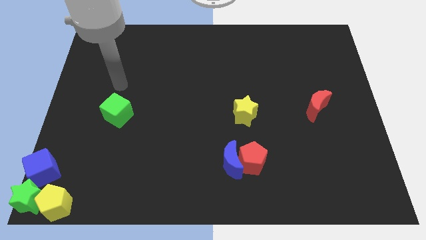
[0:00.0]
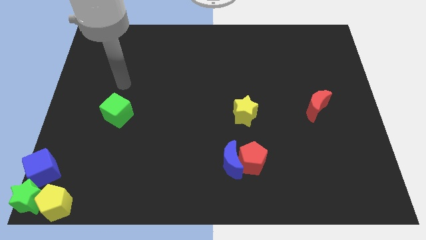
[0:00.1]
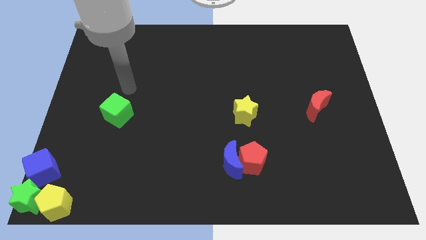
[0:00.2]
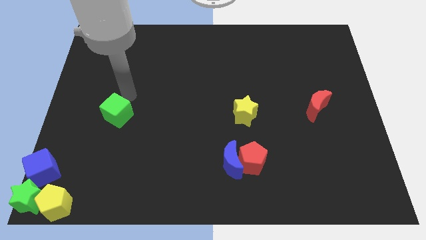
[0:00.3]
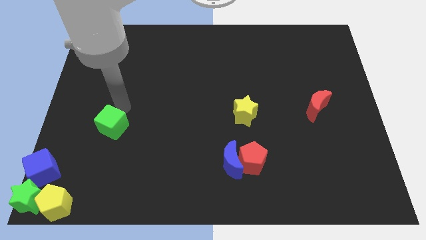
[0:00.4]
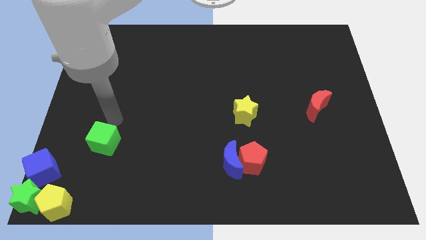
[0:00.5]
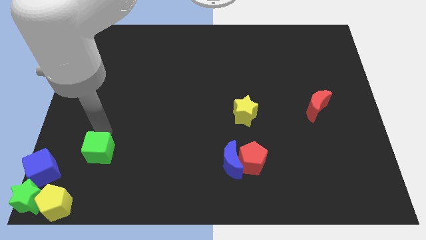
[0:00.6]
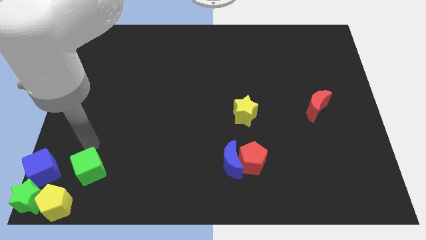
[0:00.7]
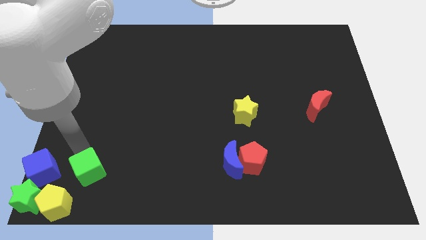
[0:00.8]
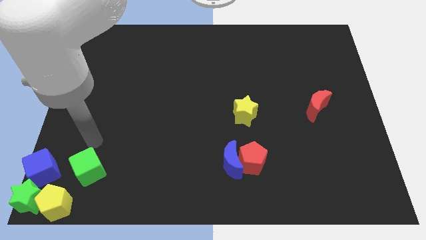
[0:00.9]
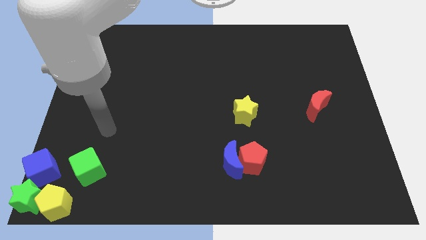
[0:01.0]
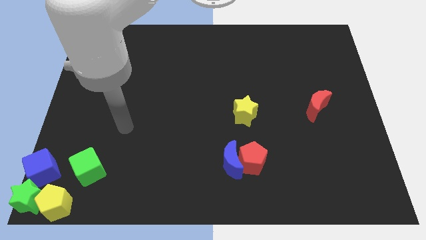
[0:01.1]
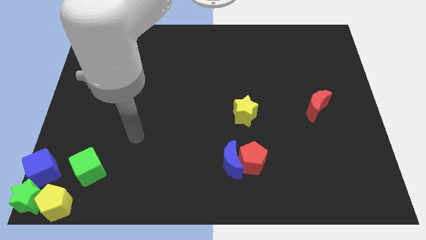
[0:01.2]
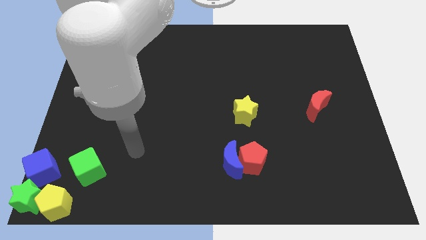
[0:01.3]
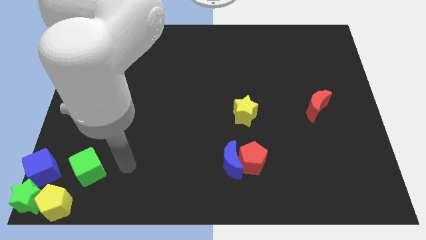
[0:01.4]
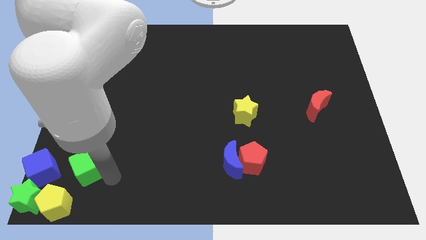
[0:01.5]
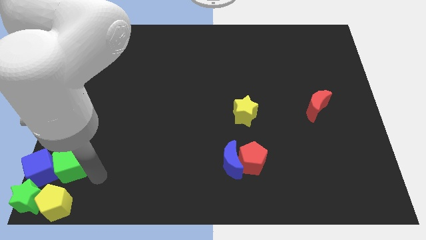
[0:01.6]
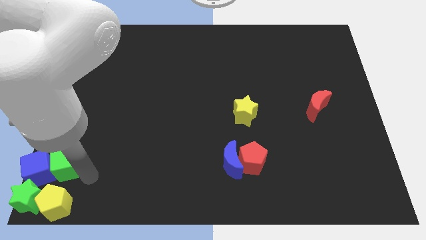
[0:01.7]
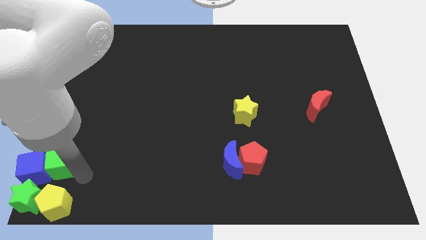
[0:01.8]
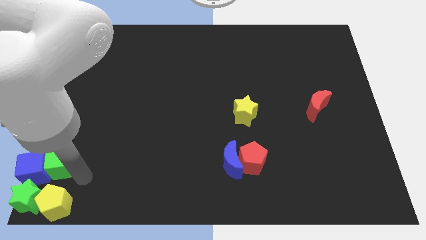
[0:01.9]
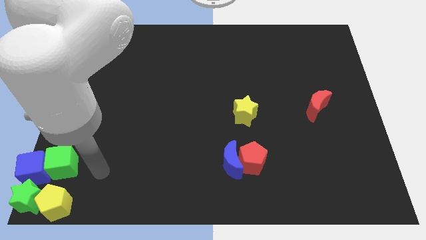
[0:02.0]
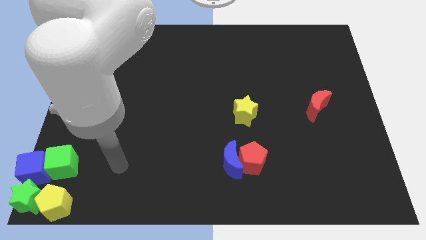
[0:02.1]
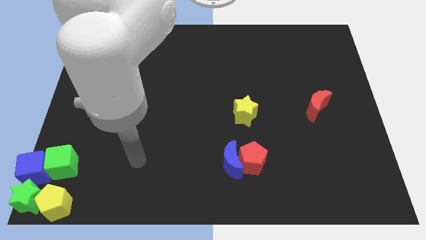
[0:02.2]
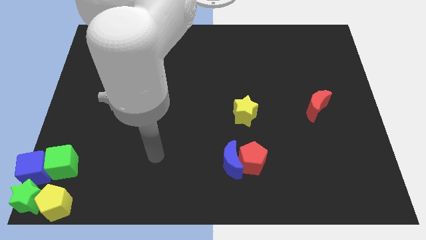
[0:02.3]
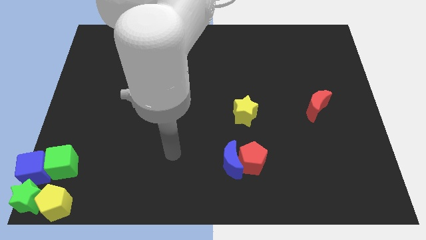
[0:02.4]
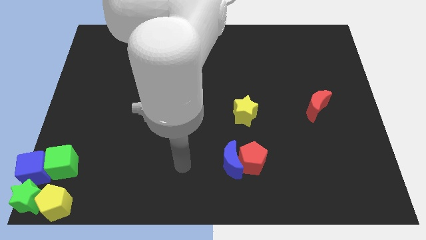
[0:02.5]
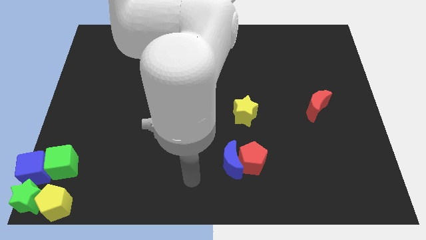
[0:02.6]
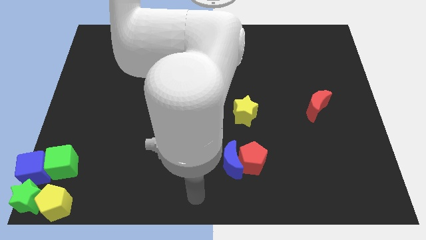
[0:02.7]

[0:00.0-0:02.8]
push the green cube into the blue cube

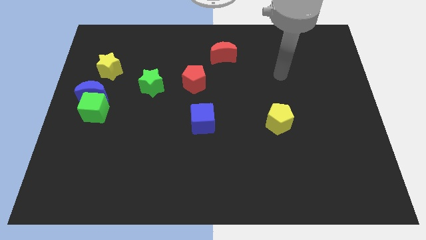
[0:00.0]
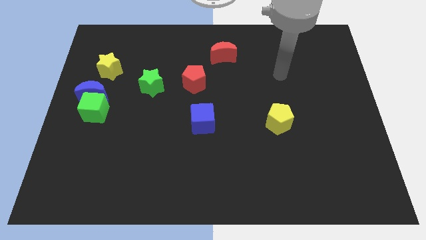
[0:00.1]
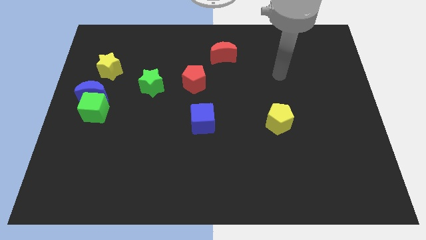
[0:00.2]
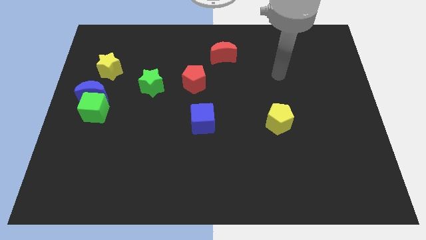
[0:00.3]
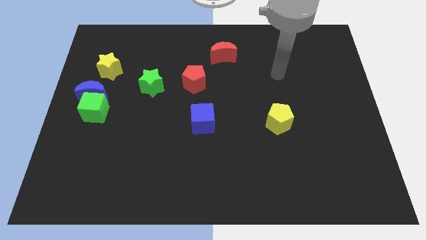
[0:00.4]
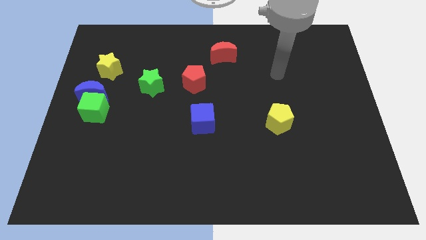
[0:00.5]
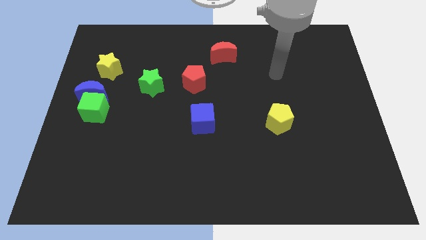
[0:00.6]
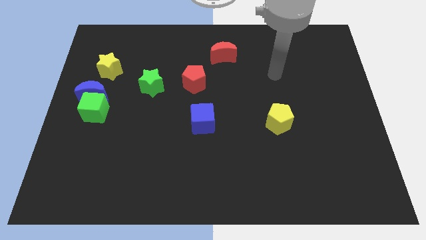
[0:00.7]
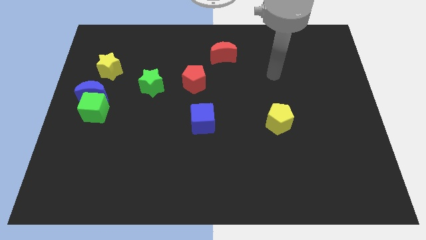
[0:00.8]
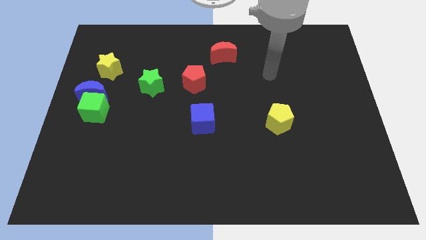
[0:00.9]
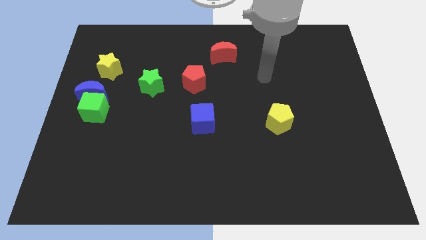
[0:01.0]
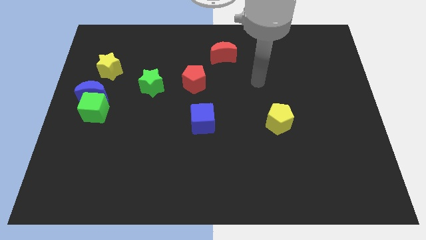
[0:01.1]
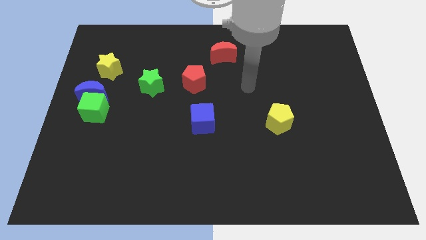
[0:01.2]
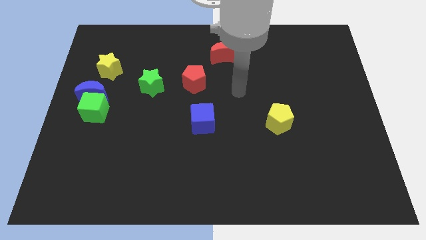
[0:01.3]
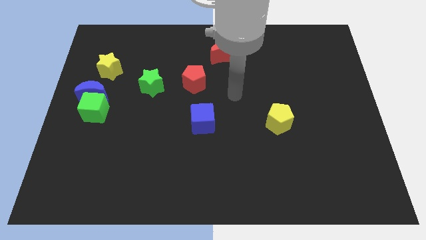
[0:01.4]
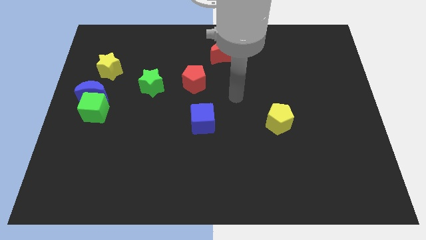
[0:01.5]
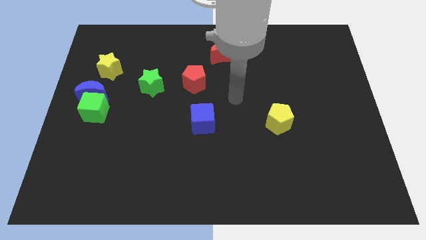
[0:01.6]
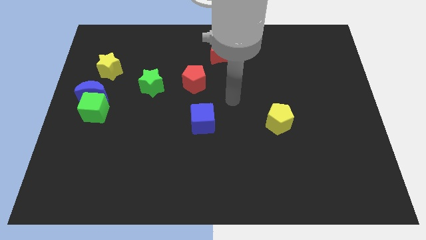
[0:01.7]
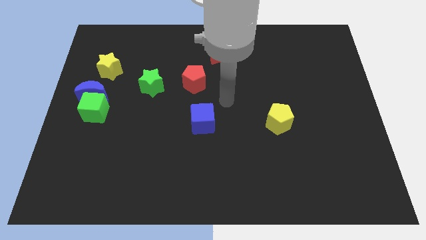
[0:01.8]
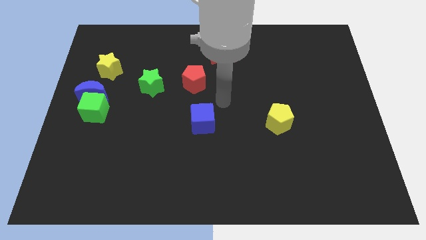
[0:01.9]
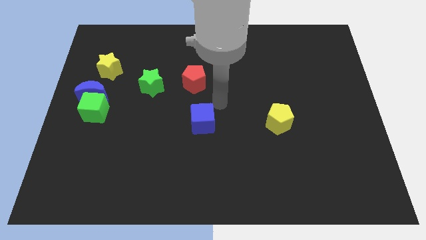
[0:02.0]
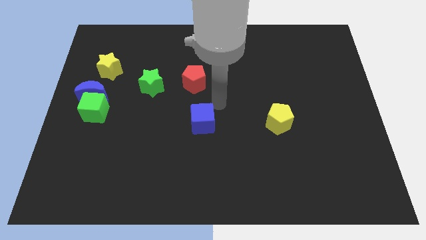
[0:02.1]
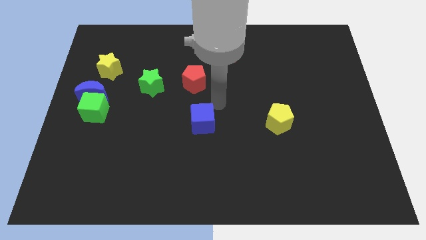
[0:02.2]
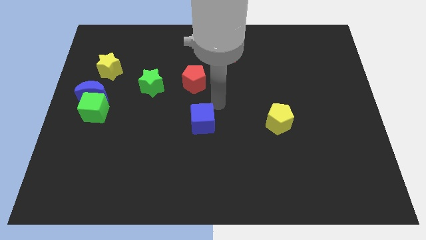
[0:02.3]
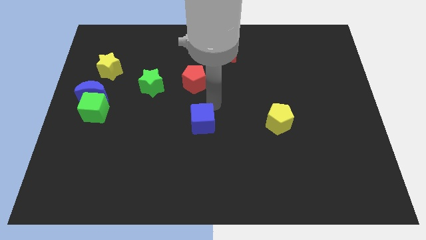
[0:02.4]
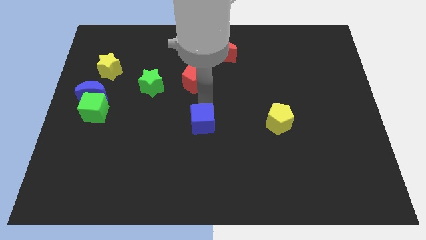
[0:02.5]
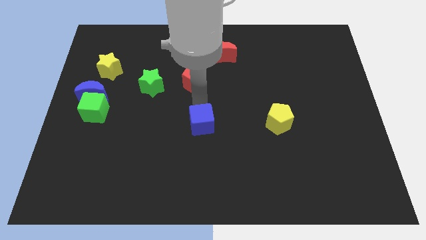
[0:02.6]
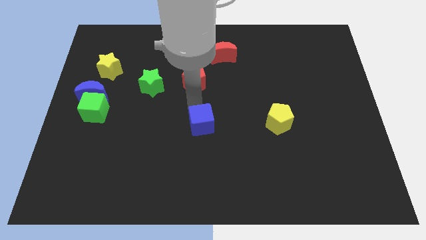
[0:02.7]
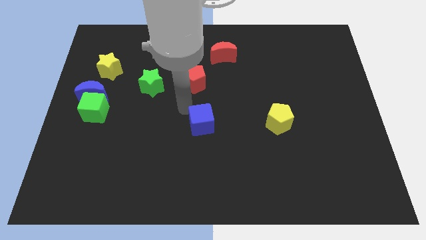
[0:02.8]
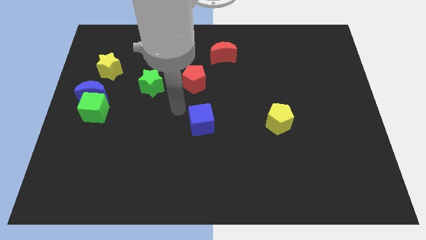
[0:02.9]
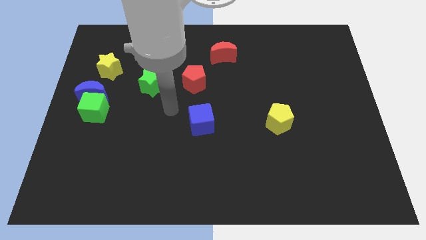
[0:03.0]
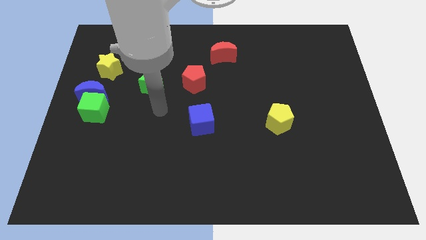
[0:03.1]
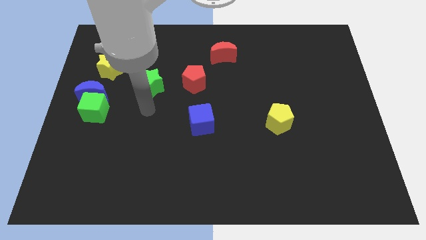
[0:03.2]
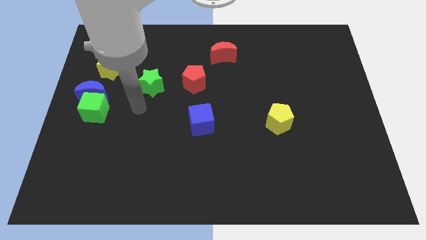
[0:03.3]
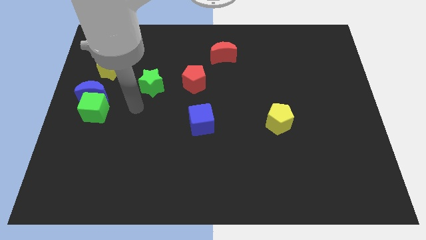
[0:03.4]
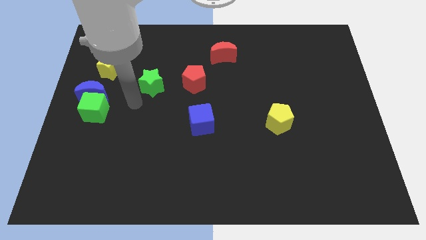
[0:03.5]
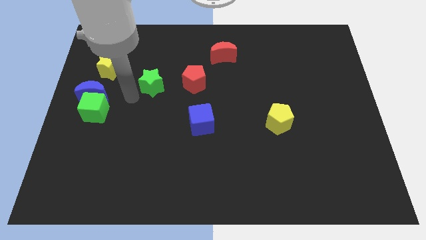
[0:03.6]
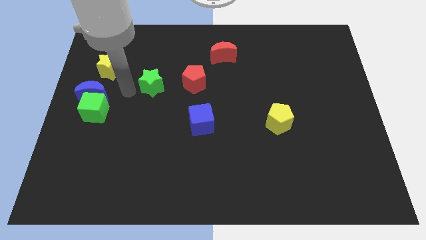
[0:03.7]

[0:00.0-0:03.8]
move the arm left to the green star

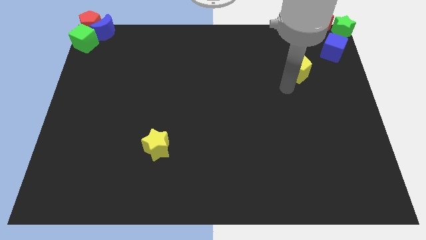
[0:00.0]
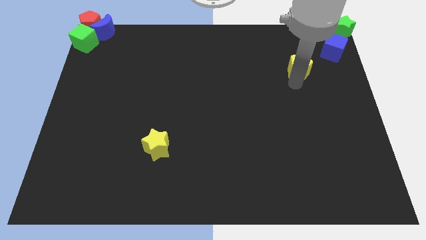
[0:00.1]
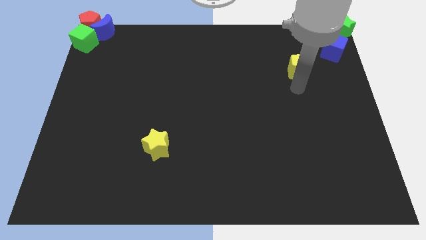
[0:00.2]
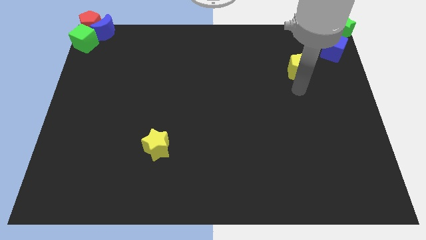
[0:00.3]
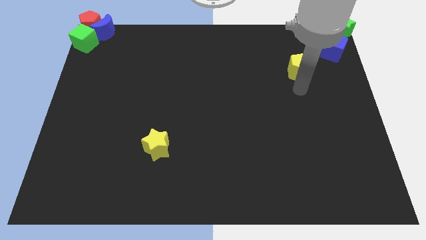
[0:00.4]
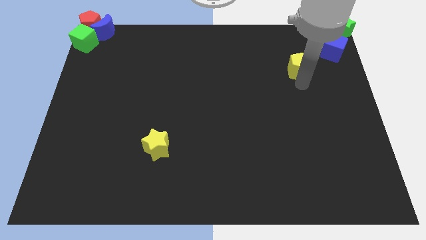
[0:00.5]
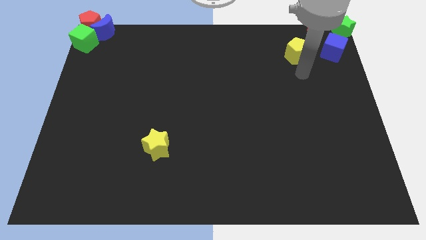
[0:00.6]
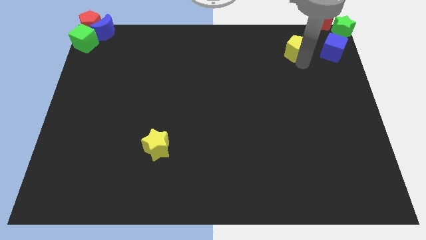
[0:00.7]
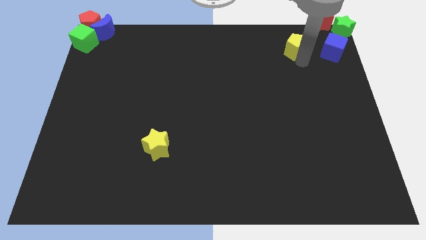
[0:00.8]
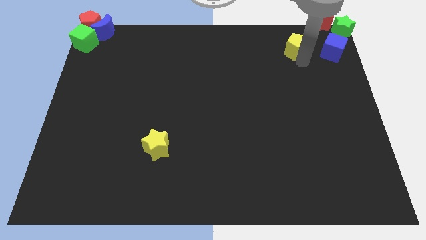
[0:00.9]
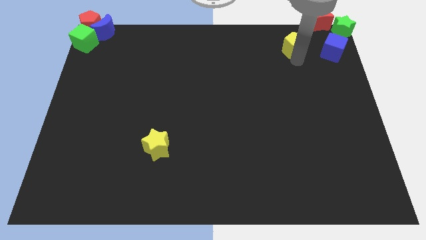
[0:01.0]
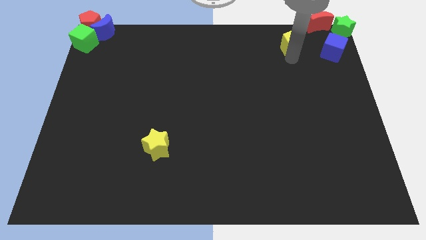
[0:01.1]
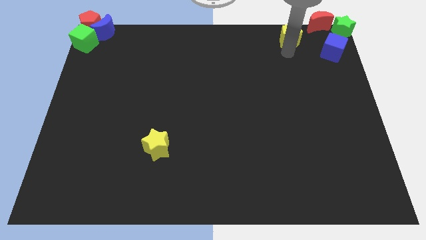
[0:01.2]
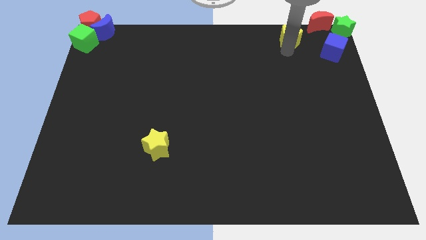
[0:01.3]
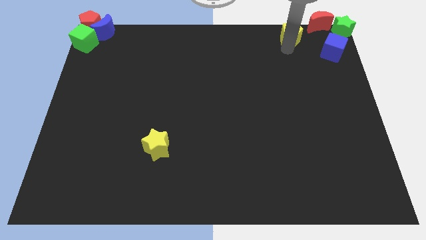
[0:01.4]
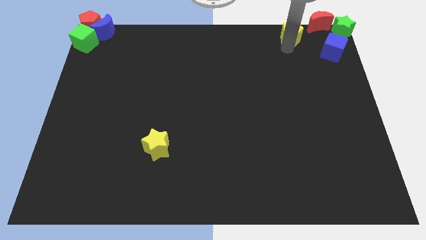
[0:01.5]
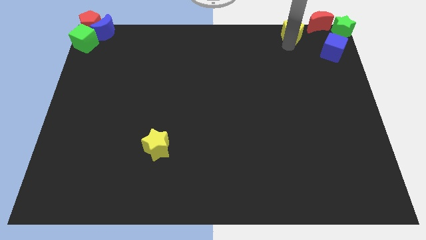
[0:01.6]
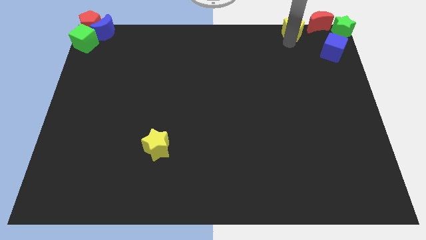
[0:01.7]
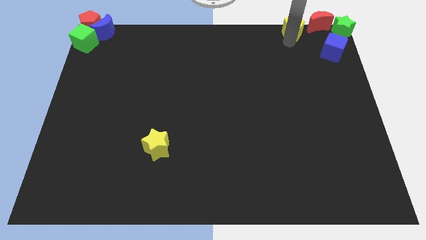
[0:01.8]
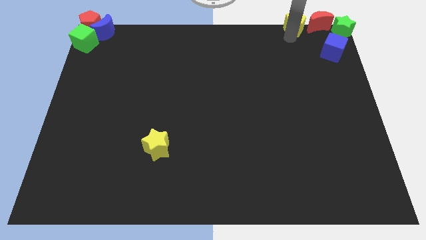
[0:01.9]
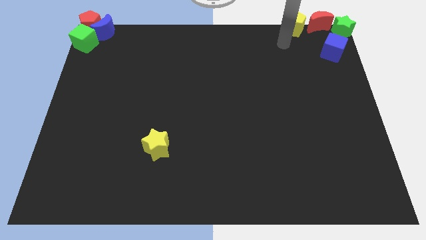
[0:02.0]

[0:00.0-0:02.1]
arrange the yellow pentagon to the left side of the red crescent
